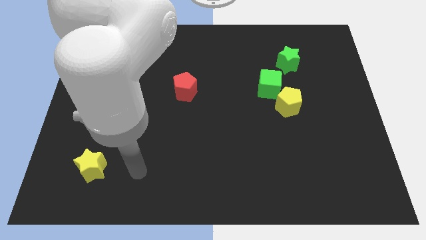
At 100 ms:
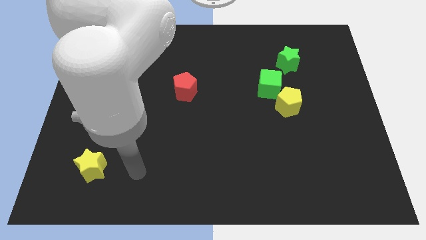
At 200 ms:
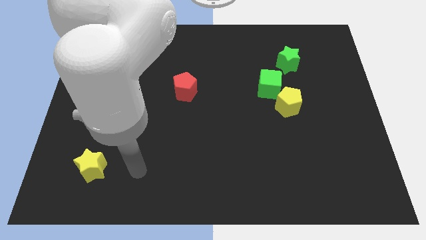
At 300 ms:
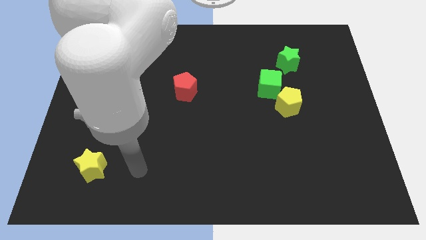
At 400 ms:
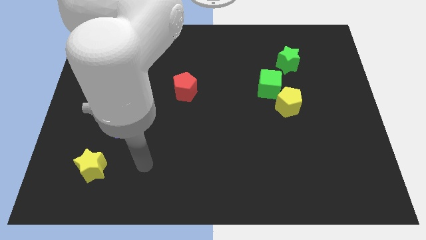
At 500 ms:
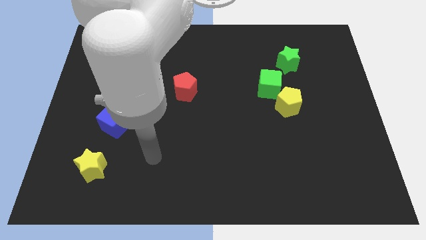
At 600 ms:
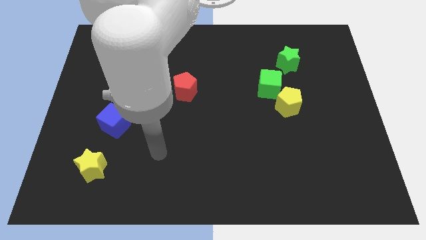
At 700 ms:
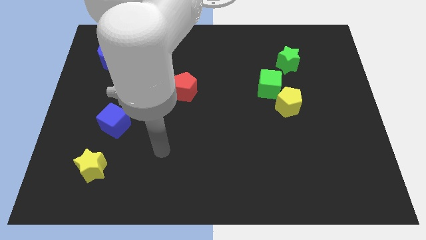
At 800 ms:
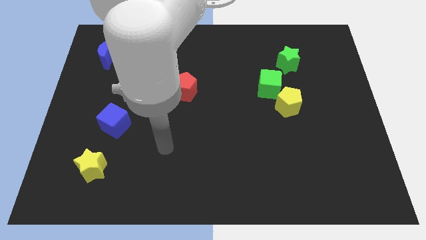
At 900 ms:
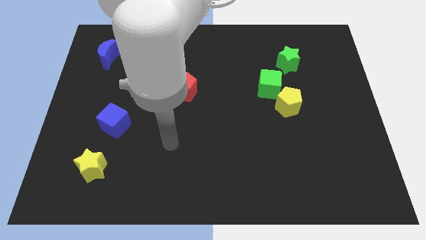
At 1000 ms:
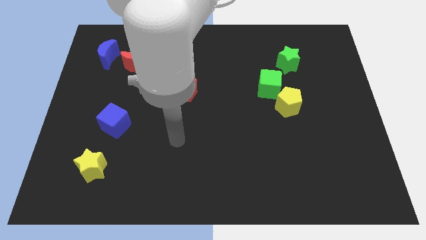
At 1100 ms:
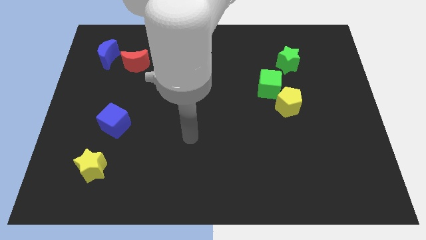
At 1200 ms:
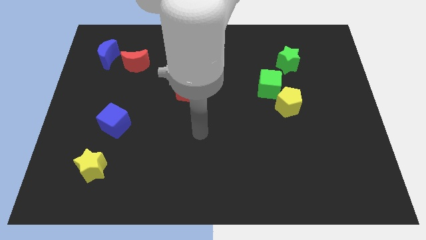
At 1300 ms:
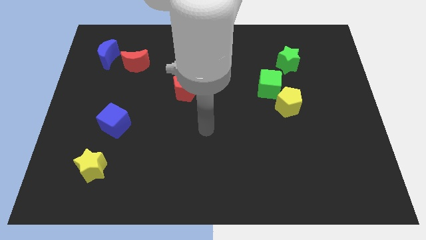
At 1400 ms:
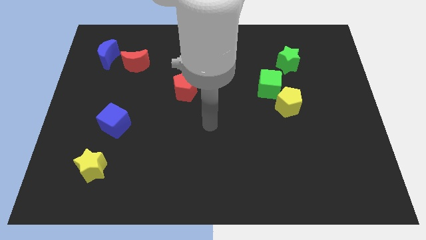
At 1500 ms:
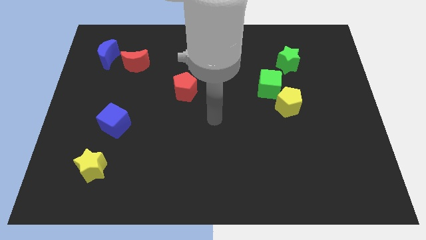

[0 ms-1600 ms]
point your arm at the center of the board

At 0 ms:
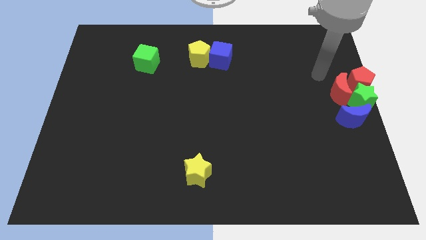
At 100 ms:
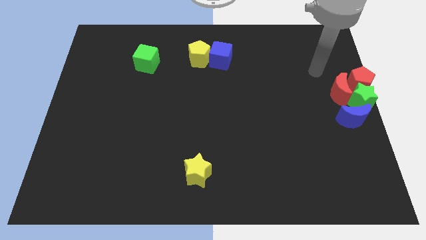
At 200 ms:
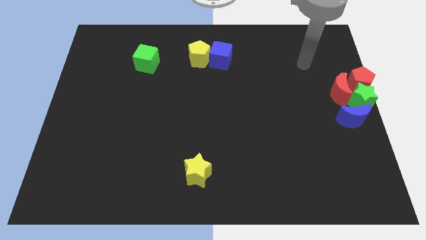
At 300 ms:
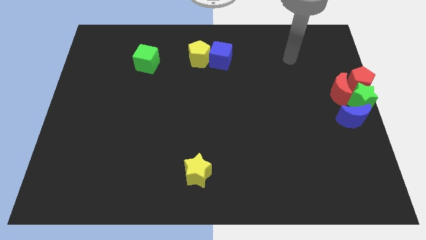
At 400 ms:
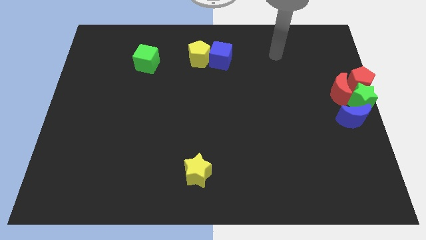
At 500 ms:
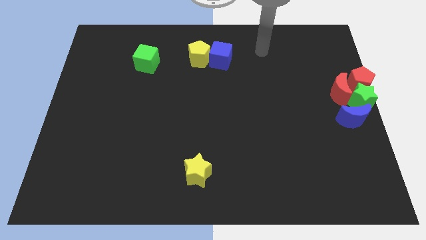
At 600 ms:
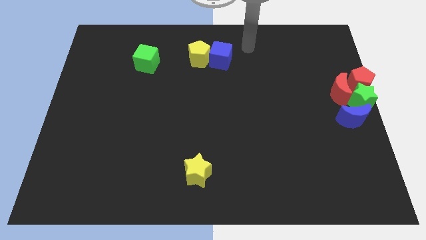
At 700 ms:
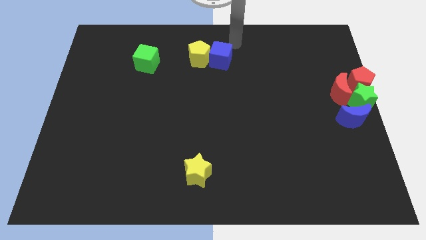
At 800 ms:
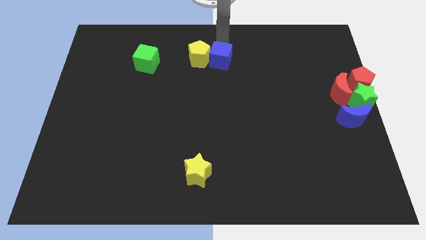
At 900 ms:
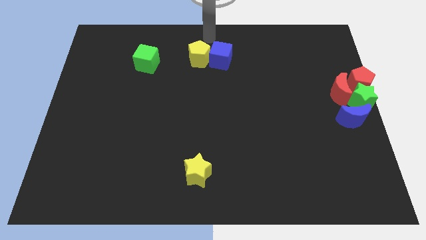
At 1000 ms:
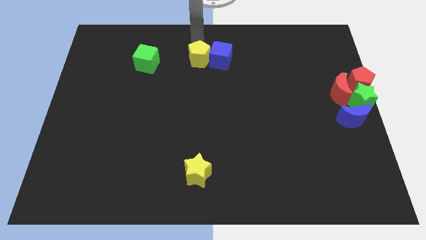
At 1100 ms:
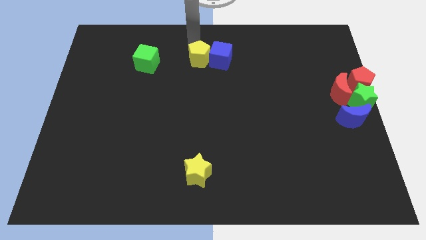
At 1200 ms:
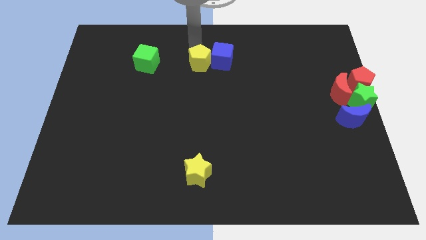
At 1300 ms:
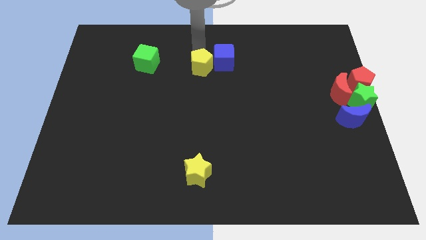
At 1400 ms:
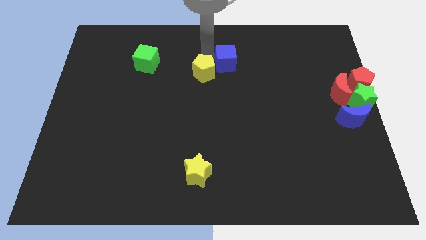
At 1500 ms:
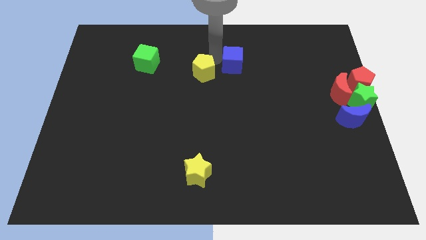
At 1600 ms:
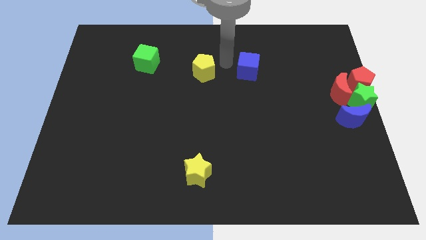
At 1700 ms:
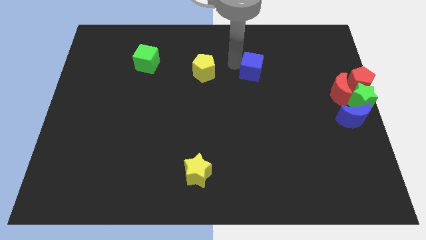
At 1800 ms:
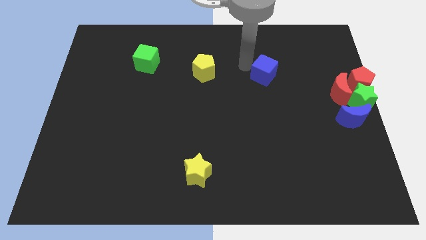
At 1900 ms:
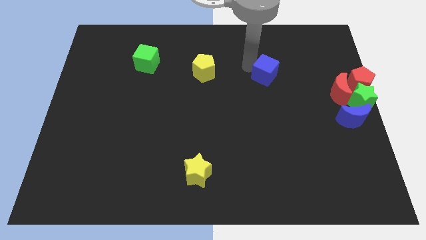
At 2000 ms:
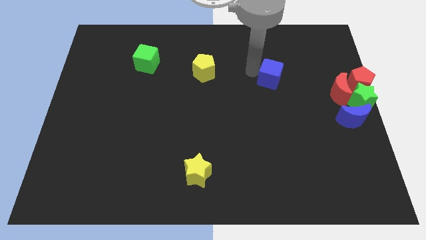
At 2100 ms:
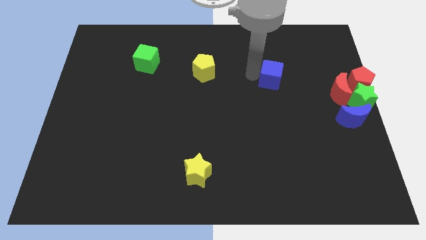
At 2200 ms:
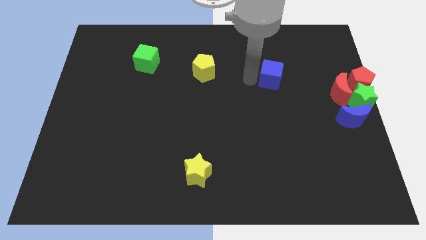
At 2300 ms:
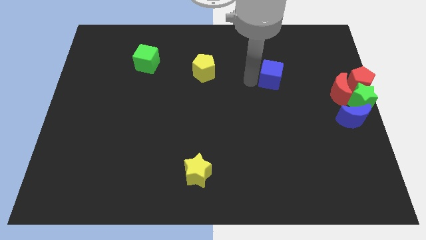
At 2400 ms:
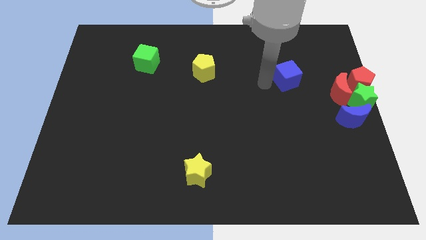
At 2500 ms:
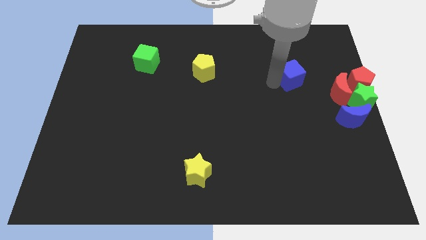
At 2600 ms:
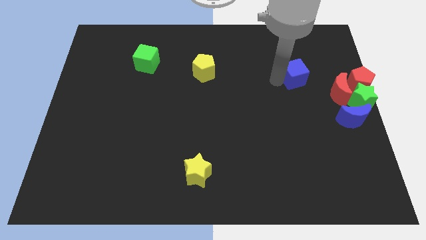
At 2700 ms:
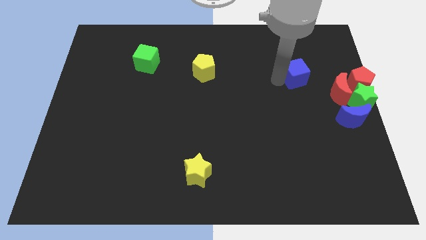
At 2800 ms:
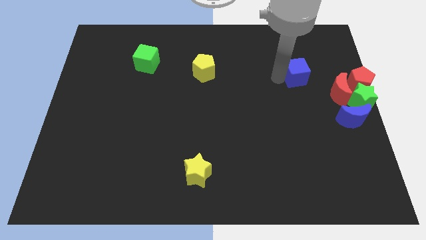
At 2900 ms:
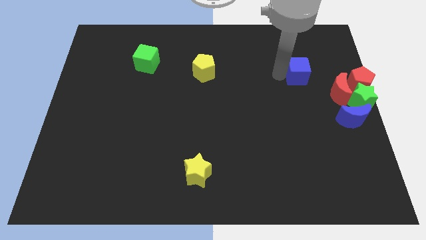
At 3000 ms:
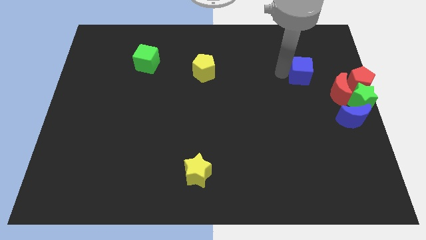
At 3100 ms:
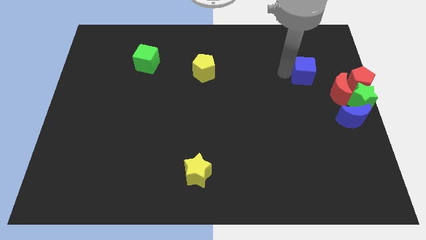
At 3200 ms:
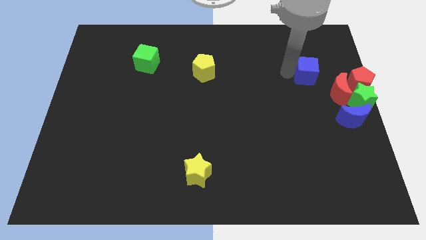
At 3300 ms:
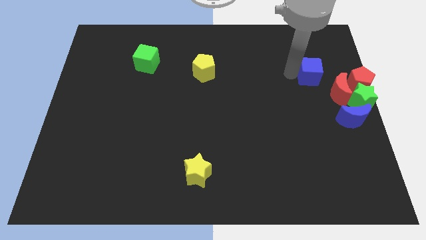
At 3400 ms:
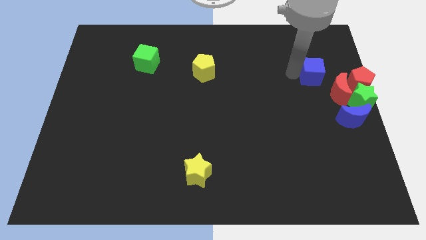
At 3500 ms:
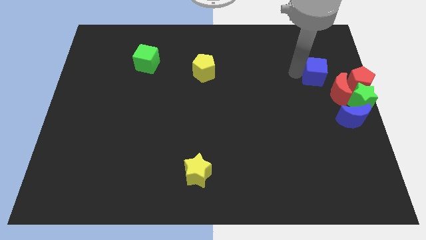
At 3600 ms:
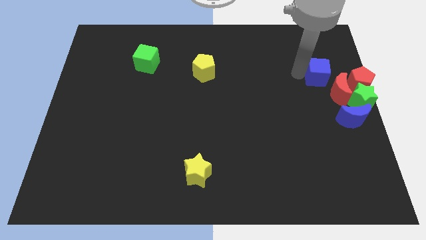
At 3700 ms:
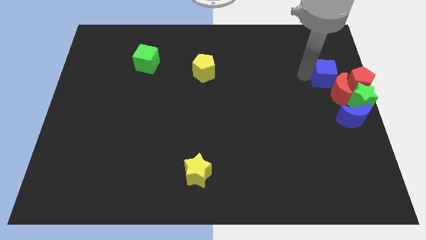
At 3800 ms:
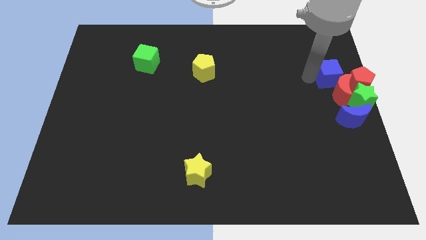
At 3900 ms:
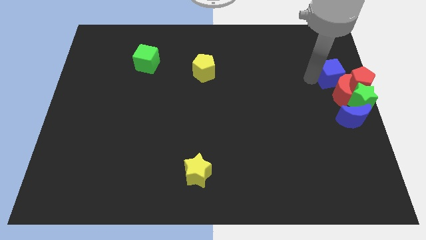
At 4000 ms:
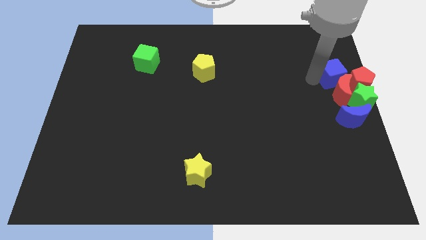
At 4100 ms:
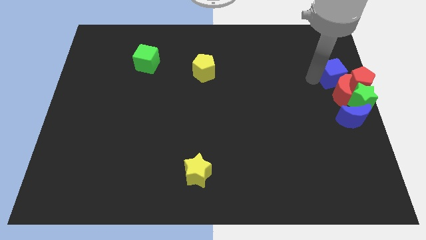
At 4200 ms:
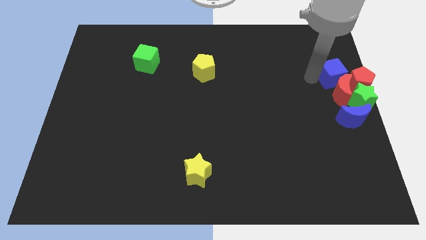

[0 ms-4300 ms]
slide the blue cube into the group of blocks

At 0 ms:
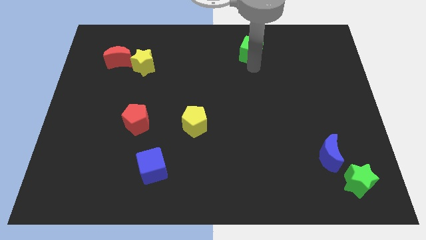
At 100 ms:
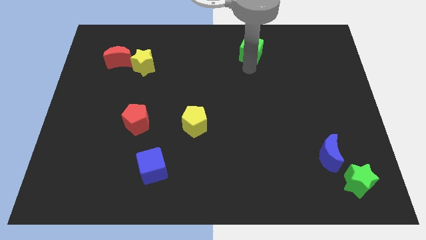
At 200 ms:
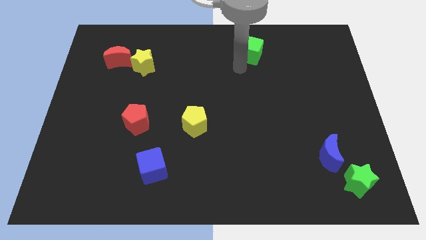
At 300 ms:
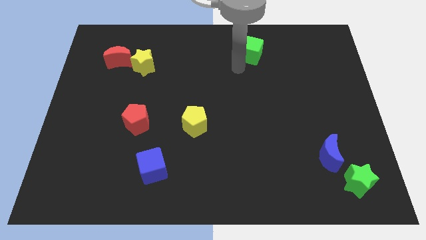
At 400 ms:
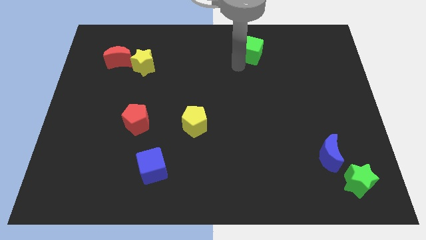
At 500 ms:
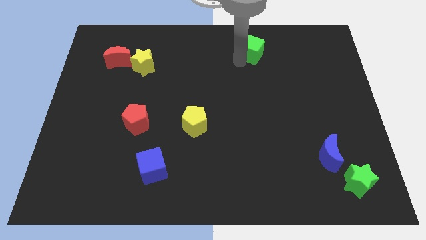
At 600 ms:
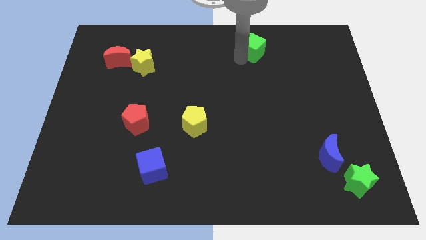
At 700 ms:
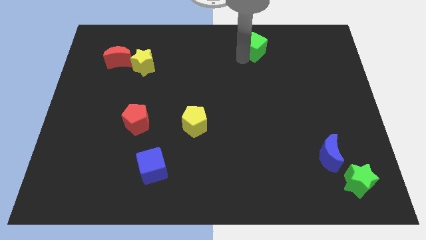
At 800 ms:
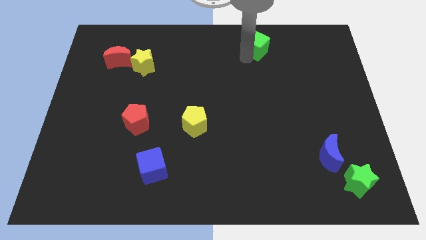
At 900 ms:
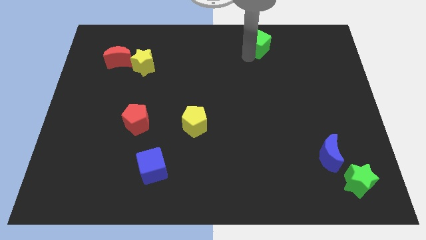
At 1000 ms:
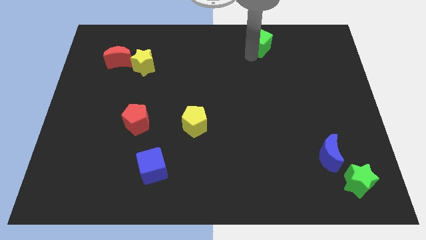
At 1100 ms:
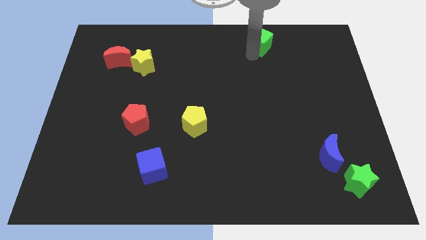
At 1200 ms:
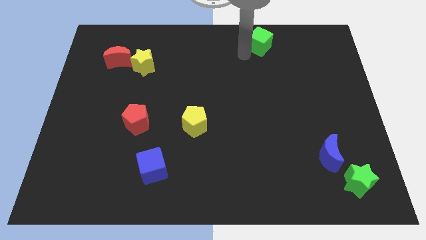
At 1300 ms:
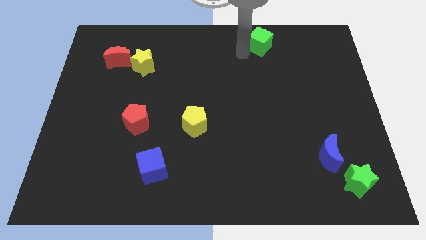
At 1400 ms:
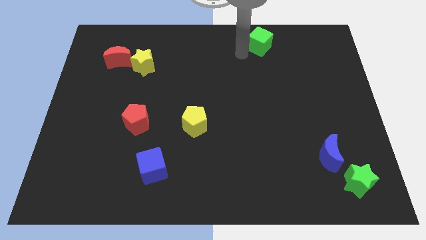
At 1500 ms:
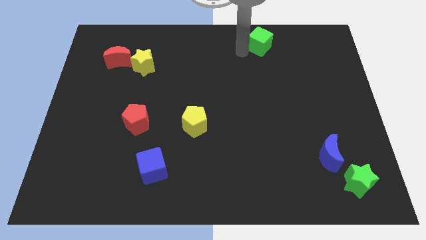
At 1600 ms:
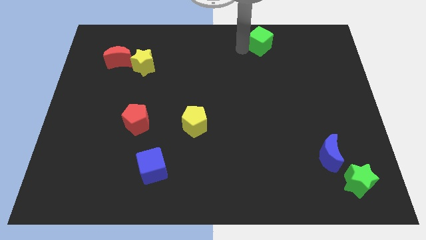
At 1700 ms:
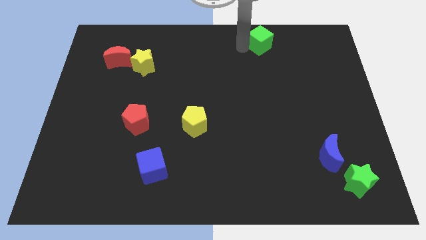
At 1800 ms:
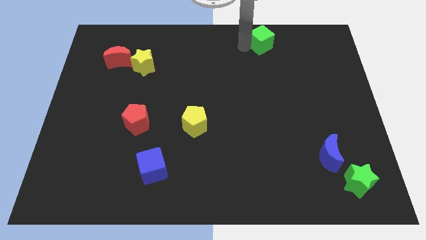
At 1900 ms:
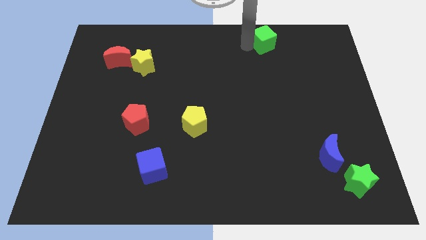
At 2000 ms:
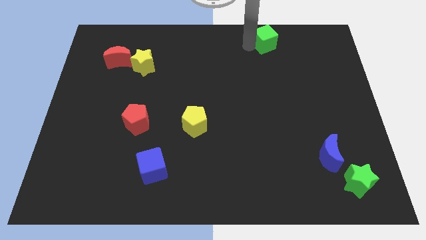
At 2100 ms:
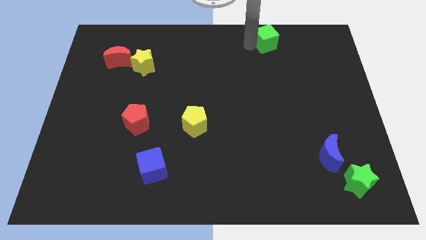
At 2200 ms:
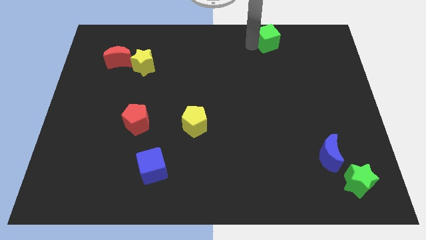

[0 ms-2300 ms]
move the green cube to the top of the board

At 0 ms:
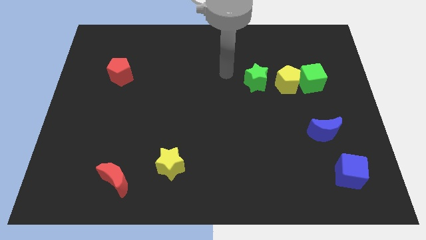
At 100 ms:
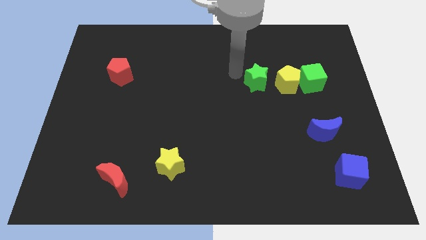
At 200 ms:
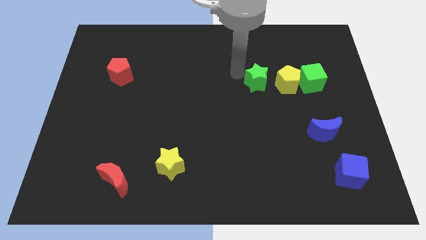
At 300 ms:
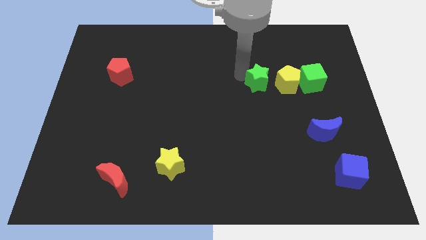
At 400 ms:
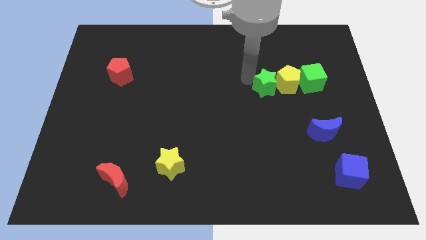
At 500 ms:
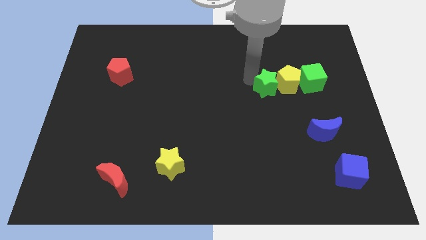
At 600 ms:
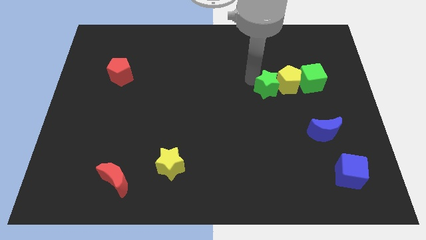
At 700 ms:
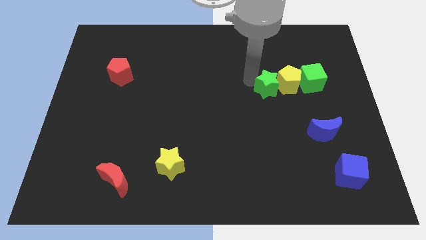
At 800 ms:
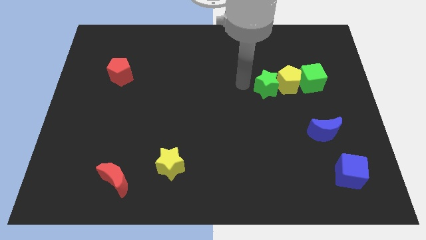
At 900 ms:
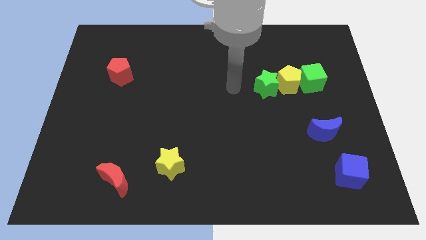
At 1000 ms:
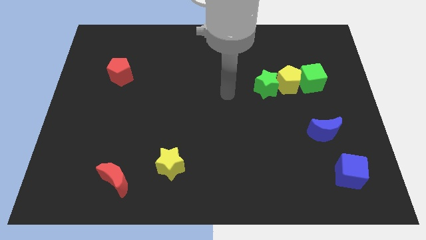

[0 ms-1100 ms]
move the green star into the yellow pentagon
